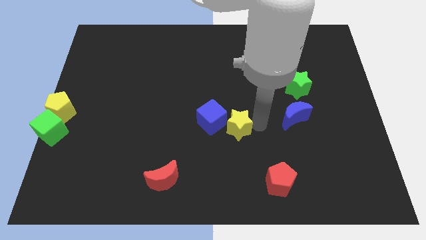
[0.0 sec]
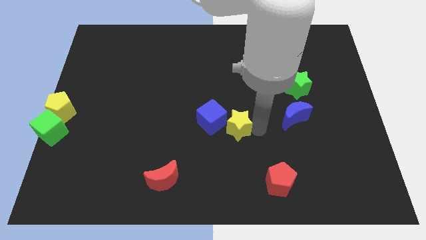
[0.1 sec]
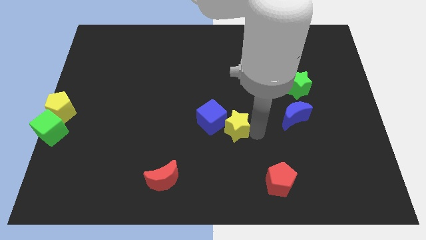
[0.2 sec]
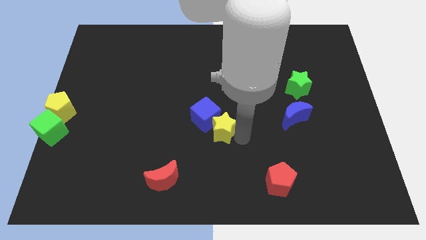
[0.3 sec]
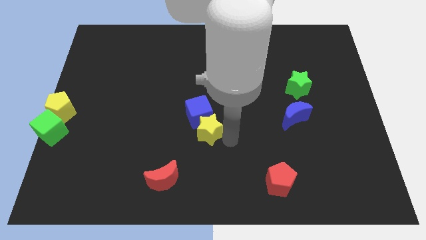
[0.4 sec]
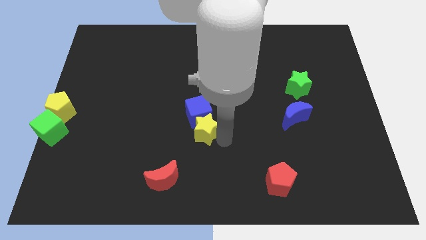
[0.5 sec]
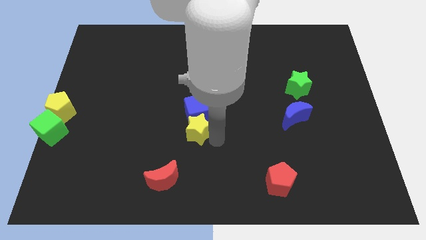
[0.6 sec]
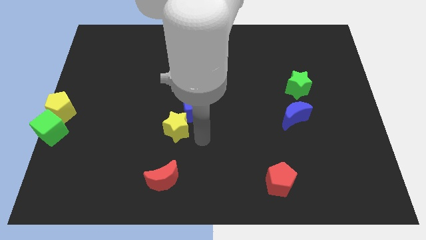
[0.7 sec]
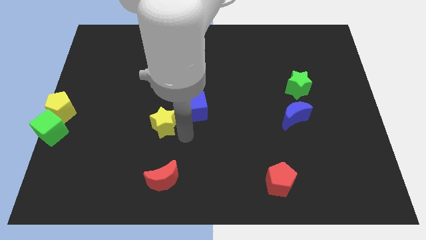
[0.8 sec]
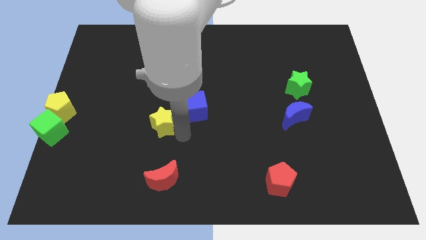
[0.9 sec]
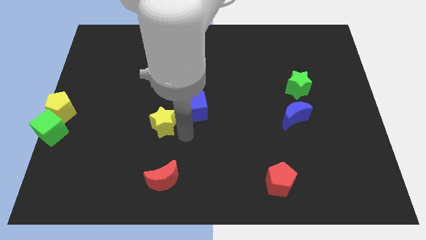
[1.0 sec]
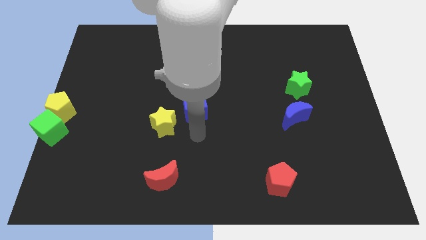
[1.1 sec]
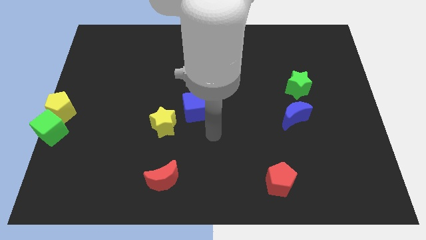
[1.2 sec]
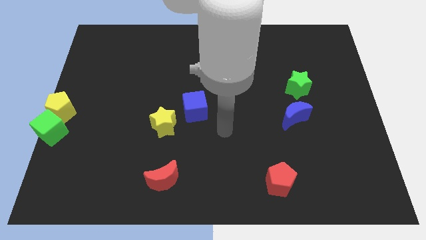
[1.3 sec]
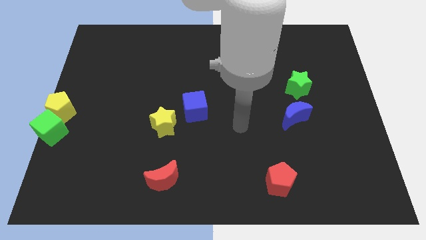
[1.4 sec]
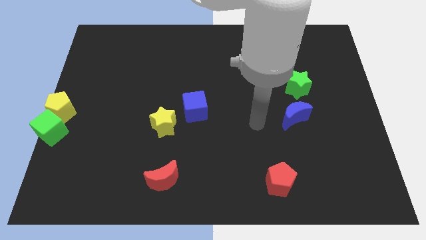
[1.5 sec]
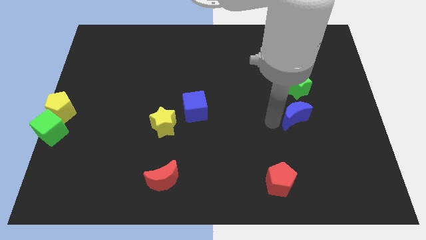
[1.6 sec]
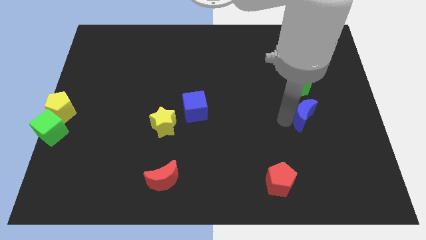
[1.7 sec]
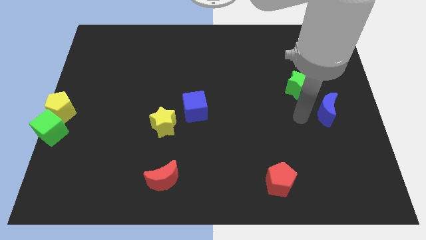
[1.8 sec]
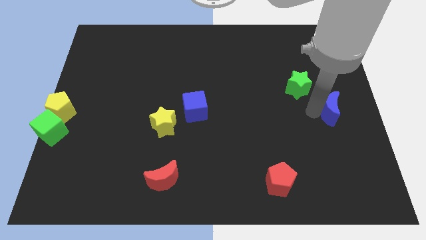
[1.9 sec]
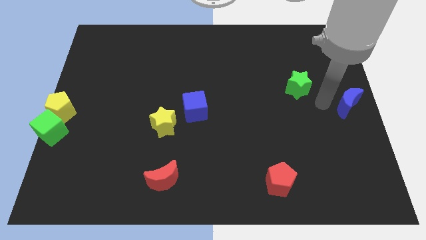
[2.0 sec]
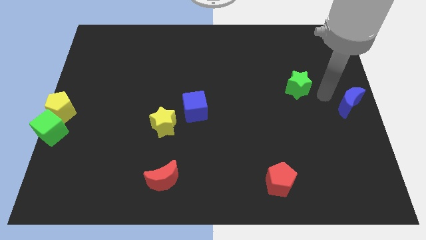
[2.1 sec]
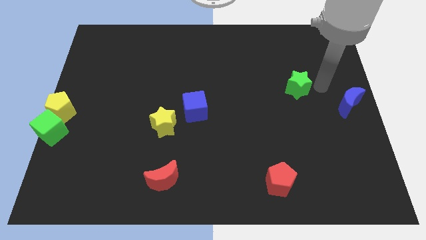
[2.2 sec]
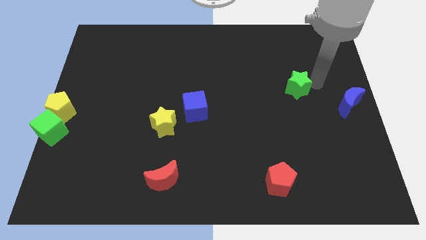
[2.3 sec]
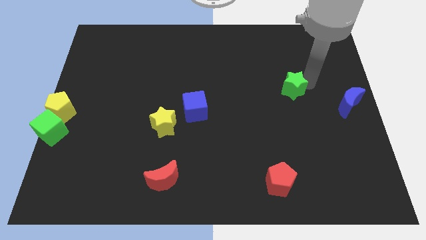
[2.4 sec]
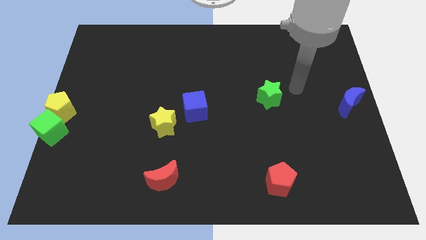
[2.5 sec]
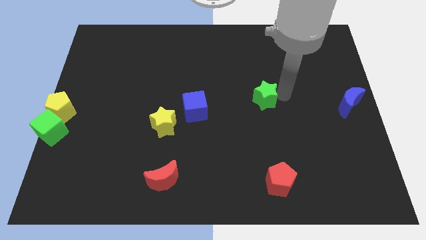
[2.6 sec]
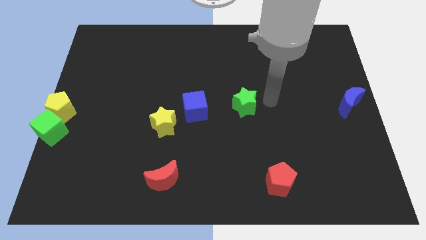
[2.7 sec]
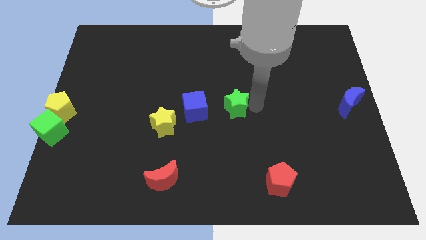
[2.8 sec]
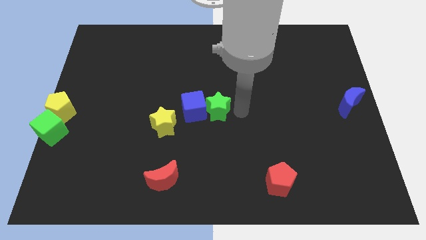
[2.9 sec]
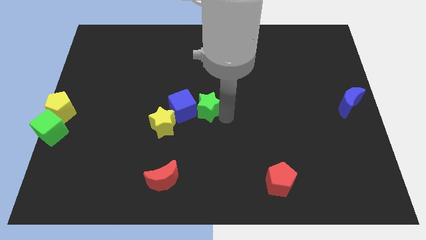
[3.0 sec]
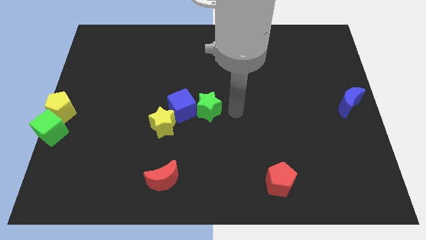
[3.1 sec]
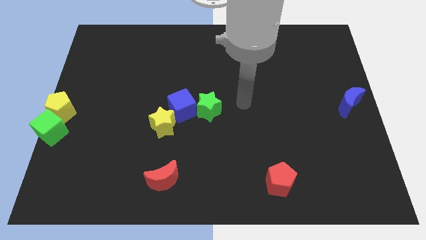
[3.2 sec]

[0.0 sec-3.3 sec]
push the green star into the blue cube

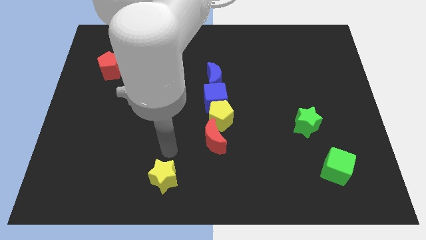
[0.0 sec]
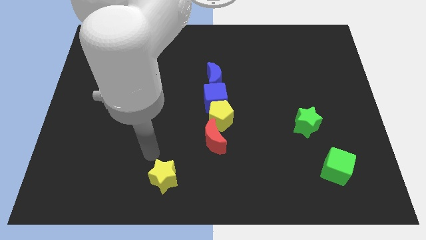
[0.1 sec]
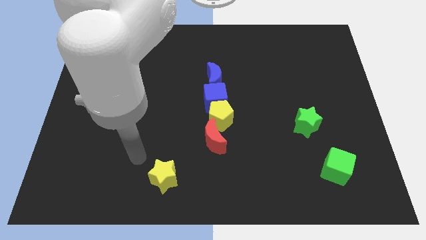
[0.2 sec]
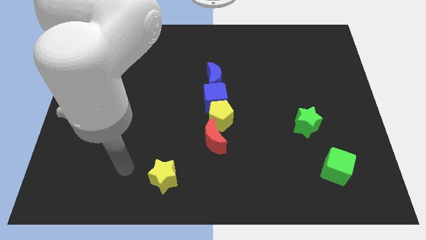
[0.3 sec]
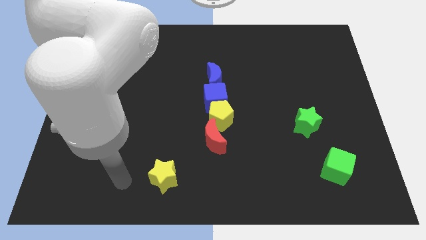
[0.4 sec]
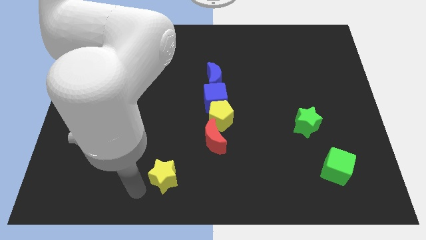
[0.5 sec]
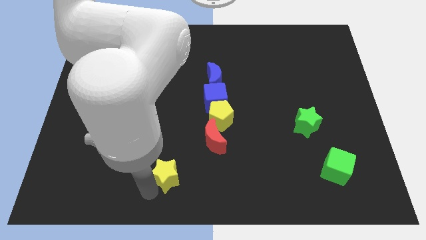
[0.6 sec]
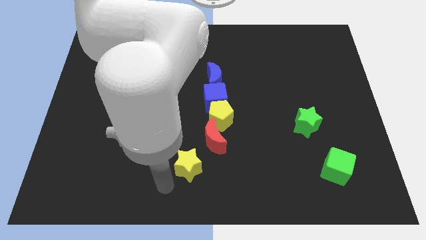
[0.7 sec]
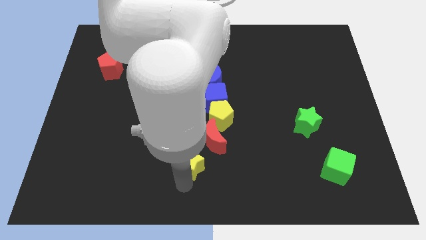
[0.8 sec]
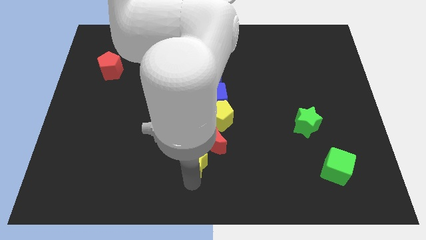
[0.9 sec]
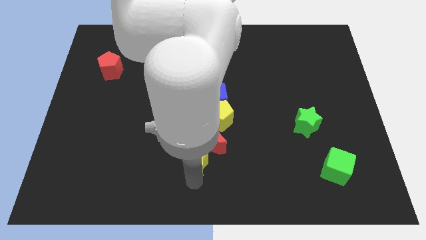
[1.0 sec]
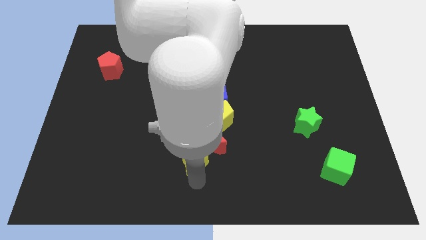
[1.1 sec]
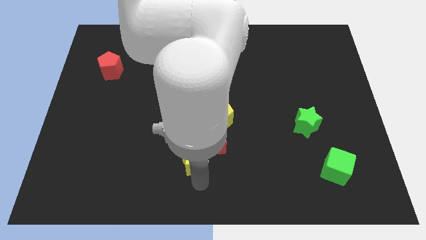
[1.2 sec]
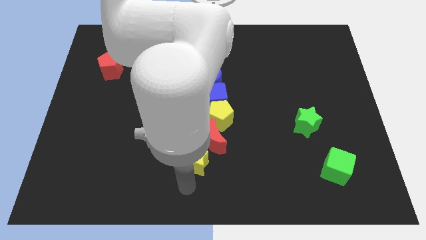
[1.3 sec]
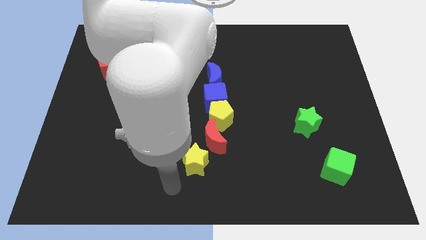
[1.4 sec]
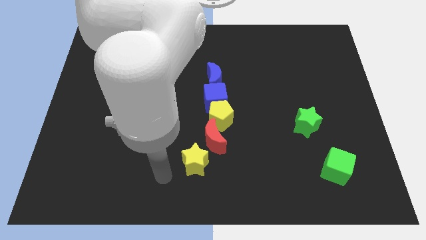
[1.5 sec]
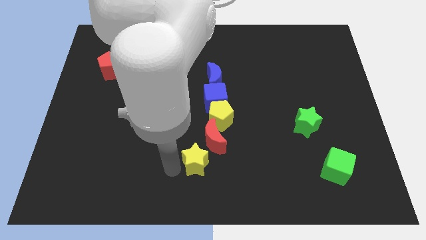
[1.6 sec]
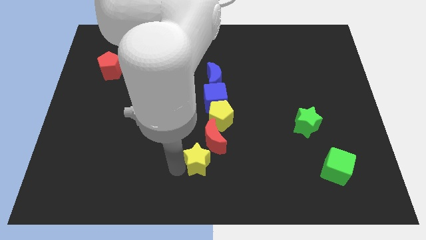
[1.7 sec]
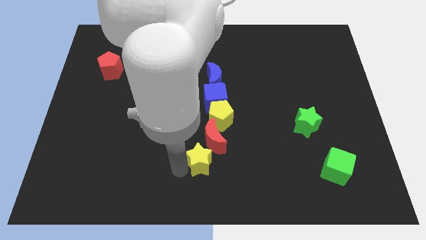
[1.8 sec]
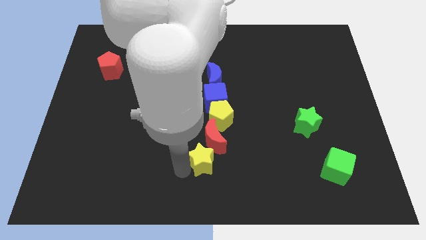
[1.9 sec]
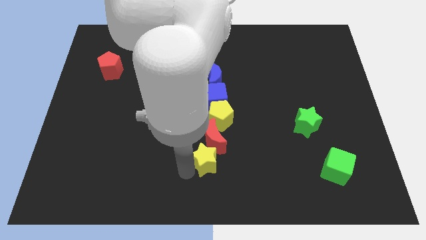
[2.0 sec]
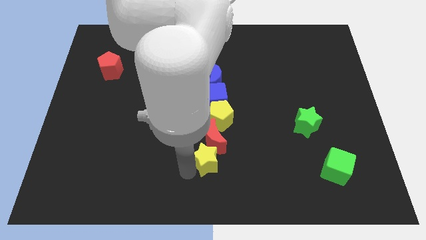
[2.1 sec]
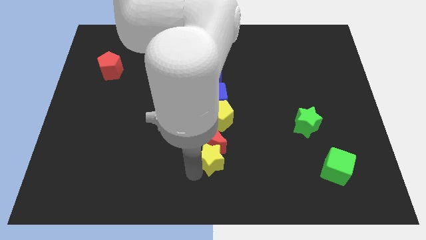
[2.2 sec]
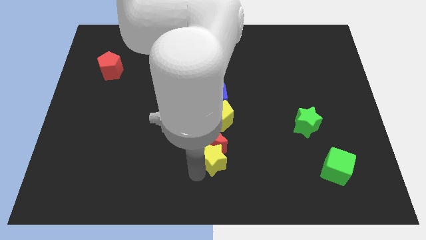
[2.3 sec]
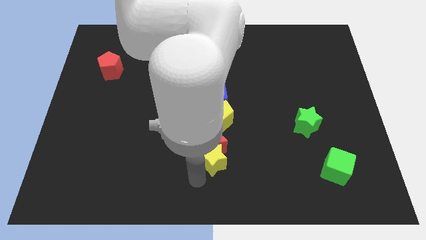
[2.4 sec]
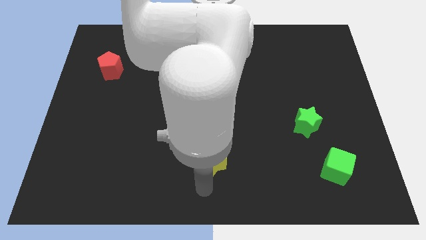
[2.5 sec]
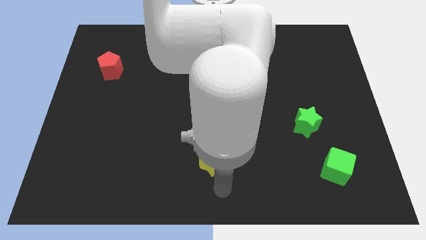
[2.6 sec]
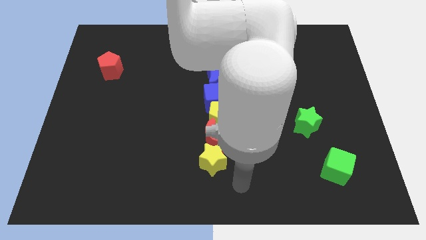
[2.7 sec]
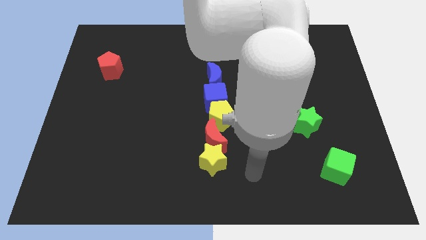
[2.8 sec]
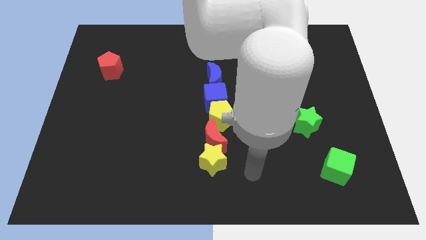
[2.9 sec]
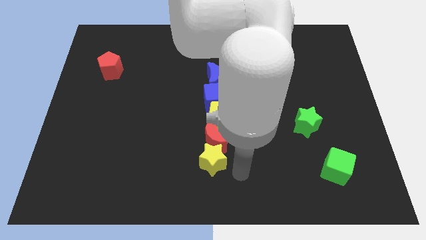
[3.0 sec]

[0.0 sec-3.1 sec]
place the yellow star below the red crescent

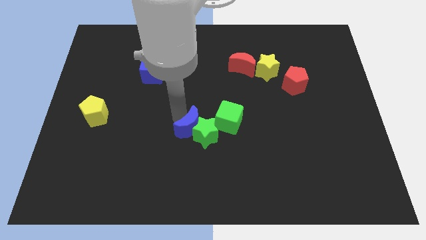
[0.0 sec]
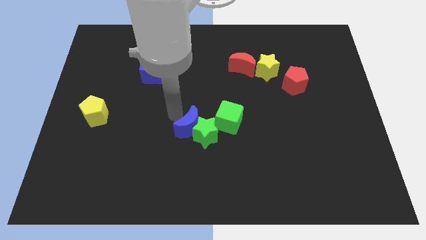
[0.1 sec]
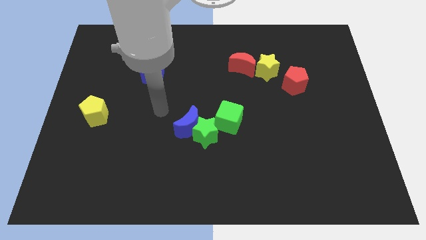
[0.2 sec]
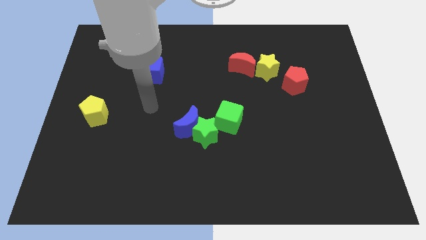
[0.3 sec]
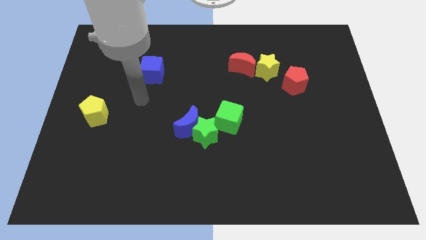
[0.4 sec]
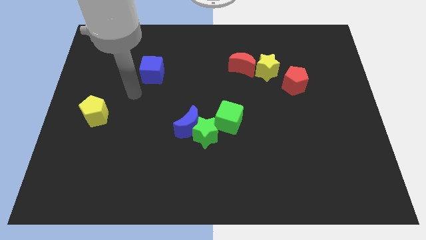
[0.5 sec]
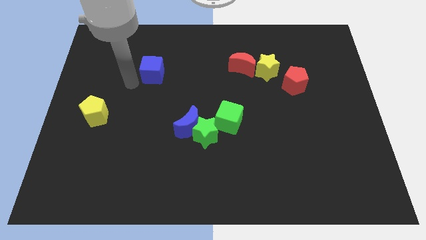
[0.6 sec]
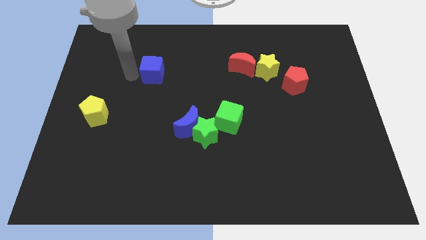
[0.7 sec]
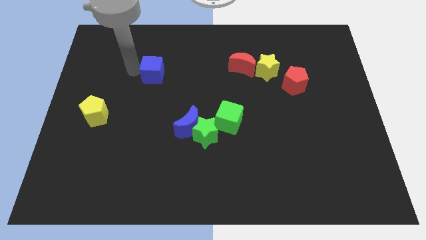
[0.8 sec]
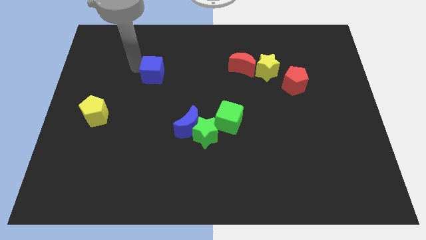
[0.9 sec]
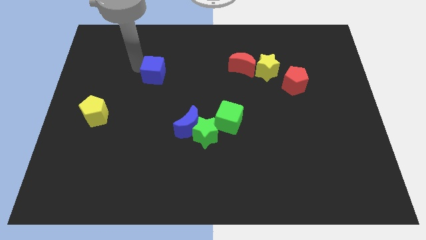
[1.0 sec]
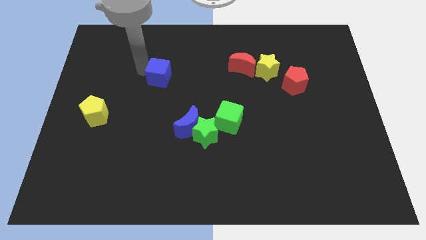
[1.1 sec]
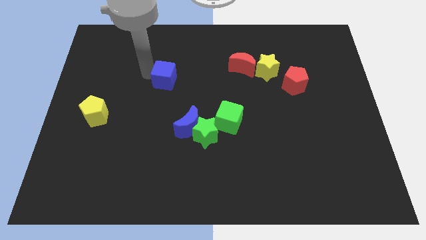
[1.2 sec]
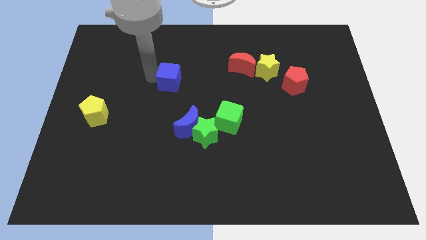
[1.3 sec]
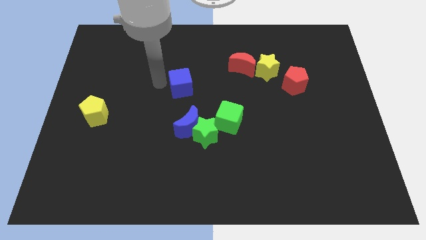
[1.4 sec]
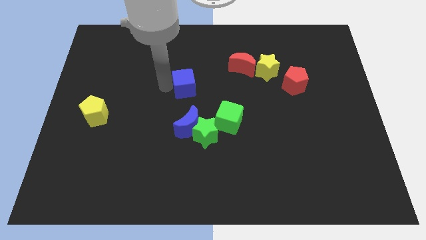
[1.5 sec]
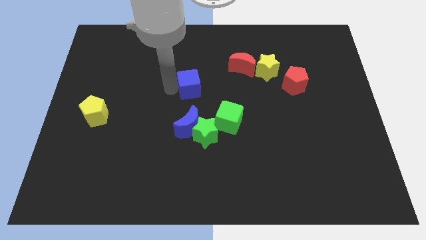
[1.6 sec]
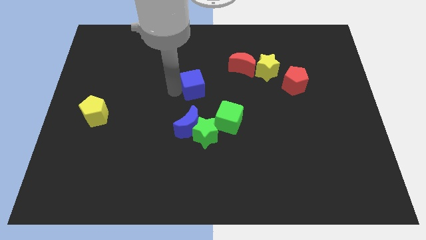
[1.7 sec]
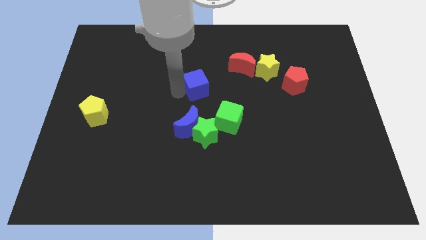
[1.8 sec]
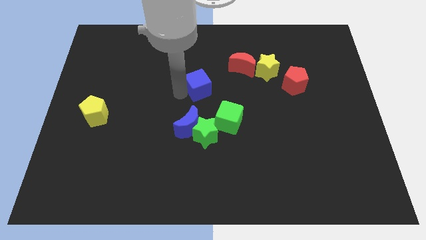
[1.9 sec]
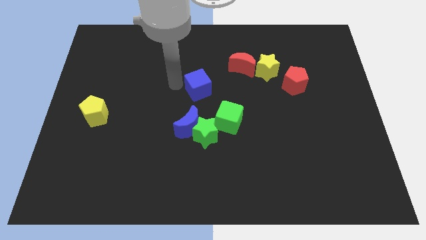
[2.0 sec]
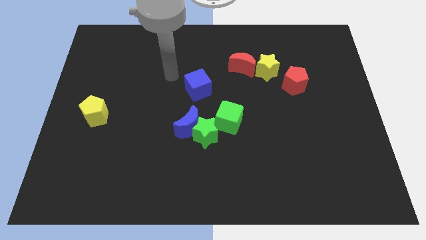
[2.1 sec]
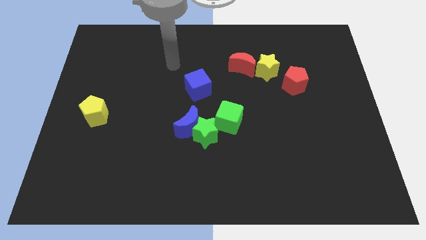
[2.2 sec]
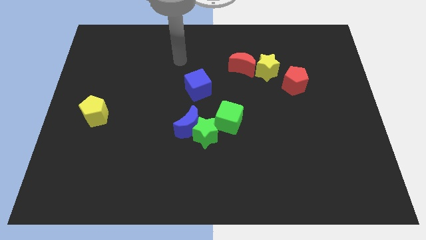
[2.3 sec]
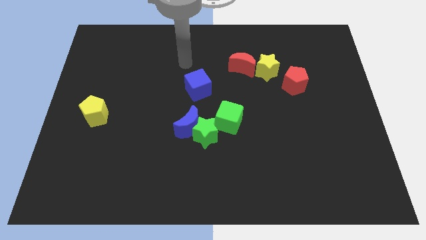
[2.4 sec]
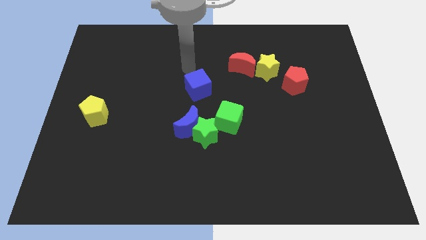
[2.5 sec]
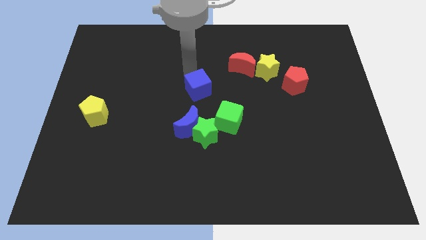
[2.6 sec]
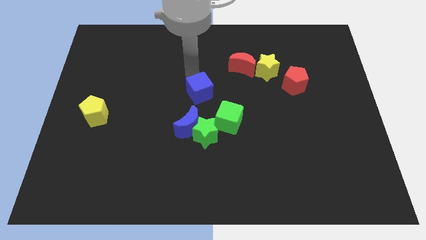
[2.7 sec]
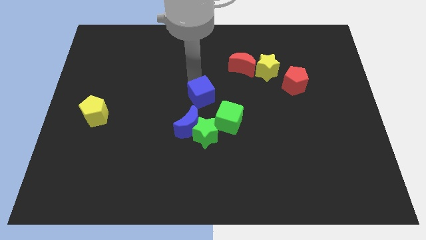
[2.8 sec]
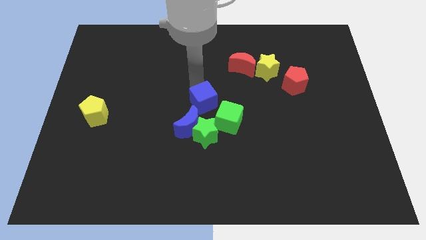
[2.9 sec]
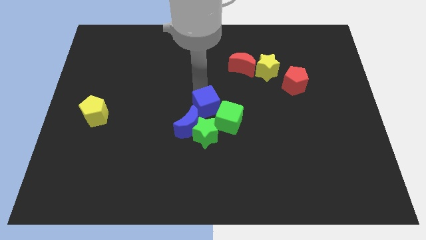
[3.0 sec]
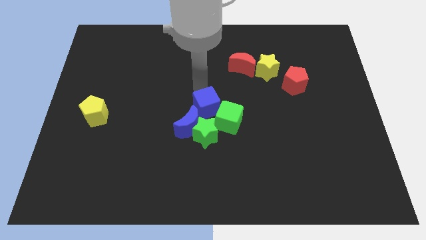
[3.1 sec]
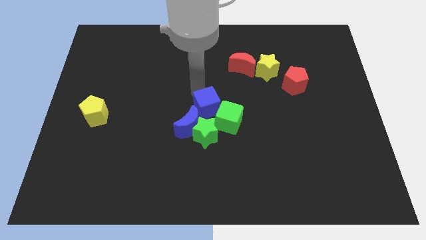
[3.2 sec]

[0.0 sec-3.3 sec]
move your arm away from the blue cube
